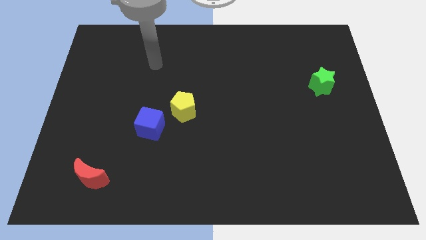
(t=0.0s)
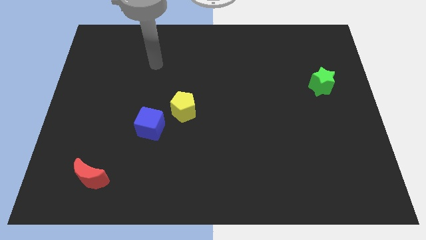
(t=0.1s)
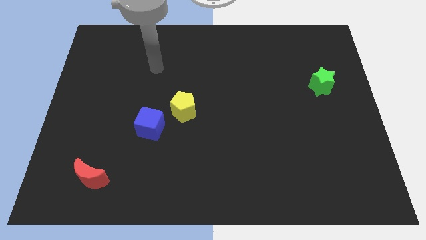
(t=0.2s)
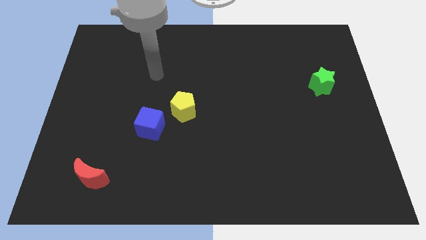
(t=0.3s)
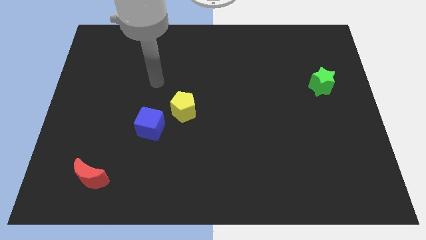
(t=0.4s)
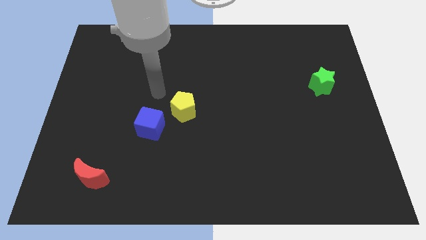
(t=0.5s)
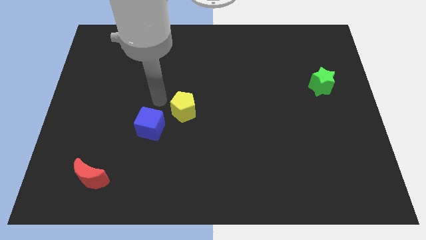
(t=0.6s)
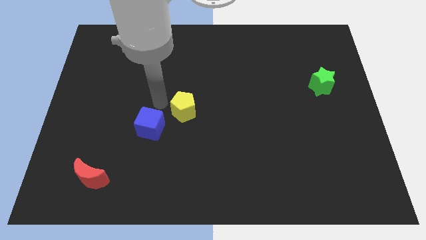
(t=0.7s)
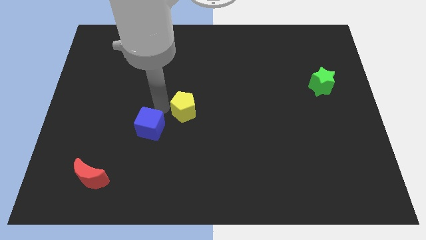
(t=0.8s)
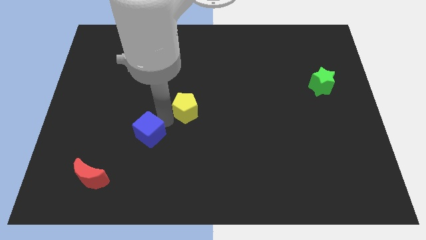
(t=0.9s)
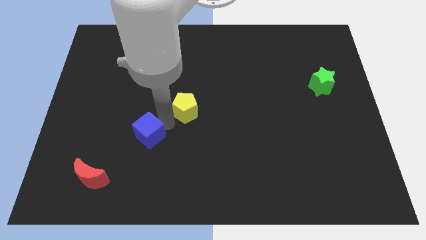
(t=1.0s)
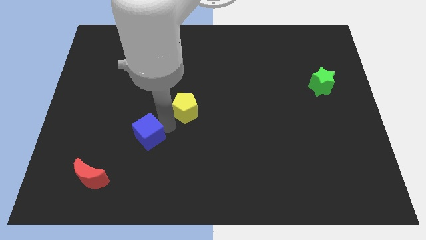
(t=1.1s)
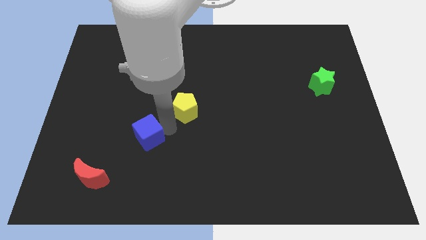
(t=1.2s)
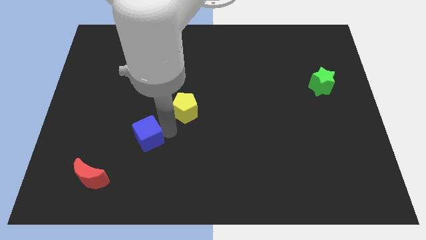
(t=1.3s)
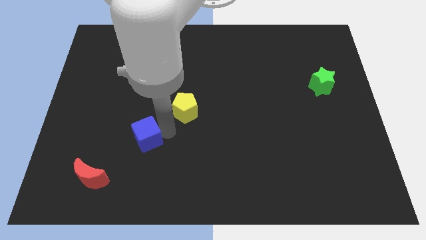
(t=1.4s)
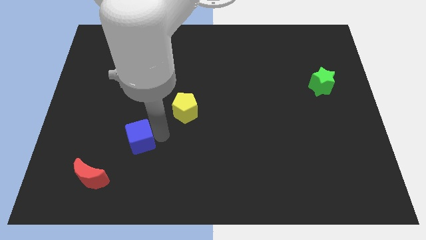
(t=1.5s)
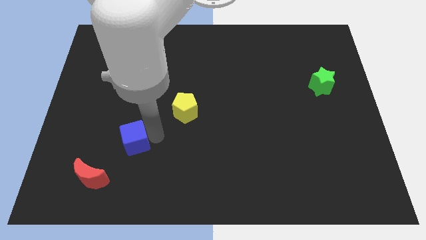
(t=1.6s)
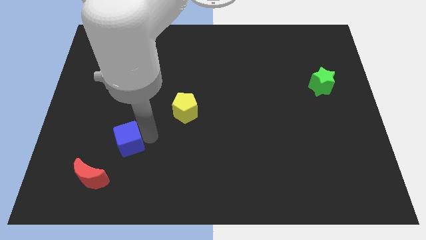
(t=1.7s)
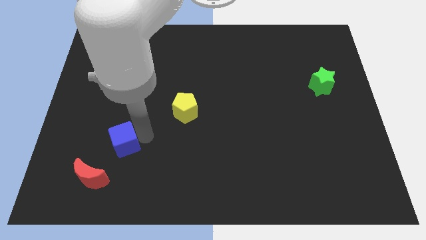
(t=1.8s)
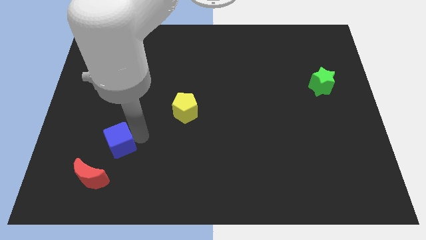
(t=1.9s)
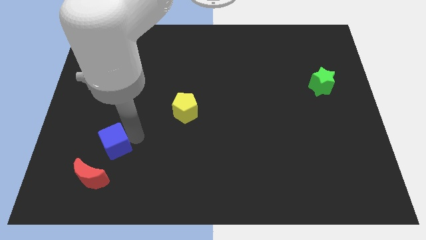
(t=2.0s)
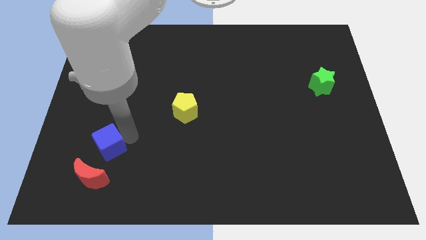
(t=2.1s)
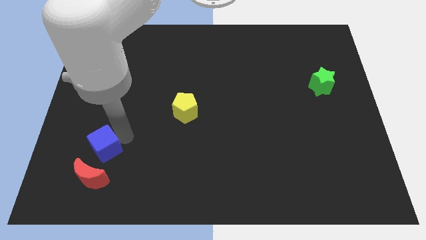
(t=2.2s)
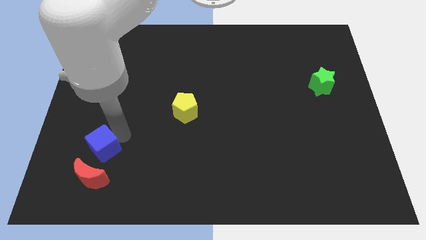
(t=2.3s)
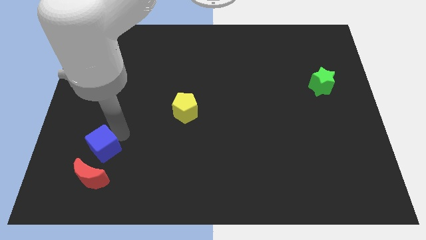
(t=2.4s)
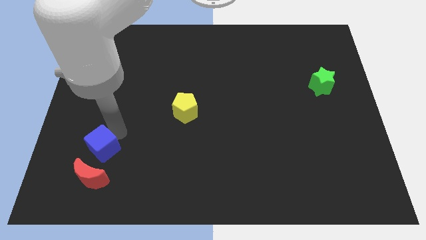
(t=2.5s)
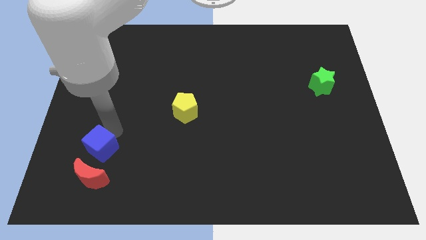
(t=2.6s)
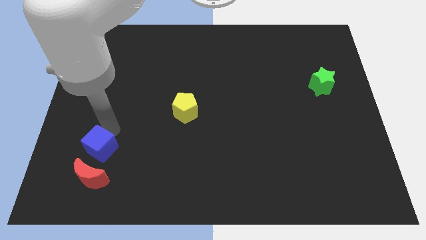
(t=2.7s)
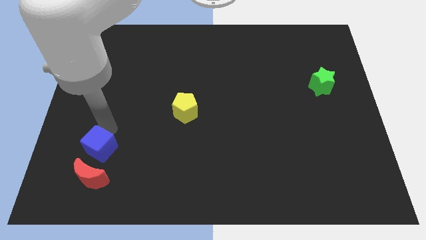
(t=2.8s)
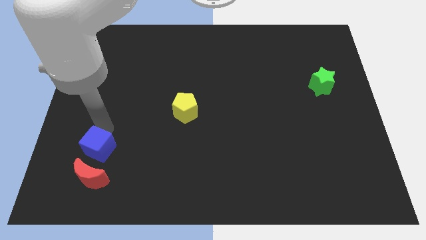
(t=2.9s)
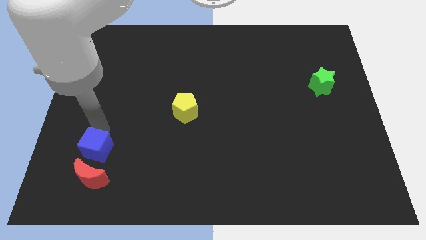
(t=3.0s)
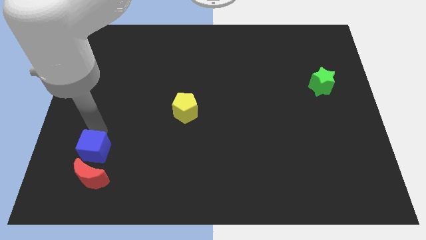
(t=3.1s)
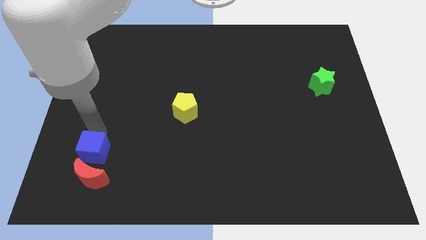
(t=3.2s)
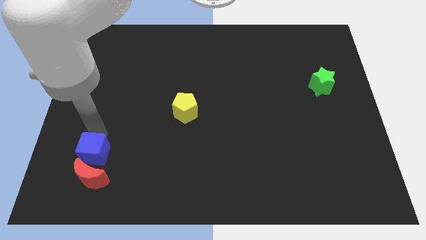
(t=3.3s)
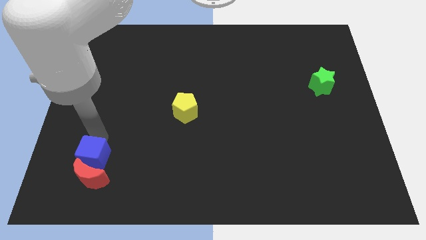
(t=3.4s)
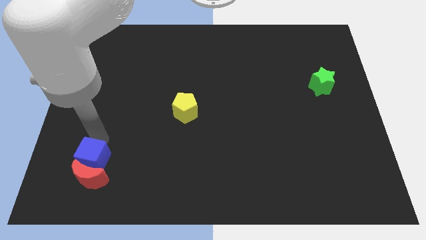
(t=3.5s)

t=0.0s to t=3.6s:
push the blue block to the red moon

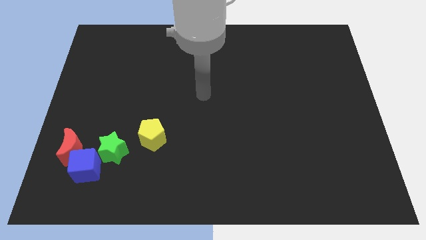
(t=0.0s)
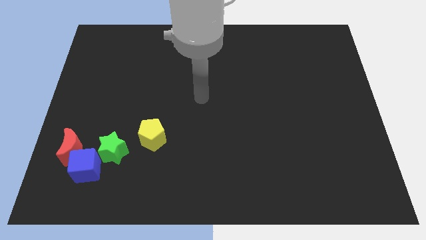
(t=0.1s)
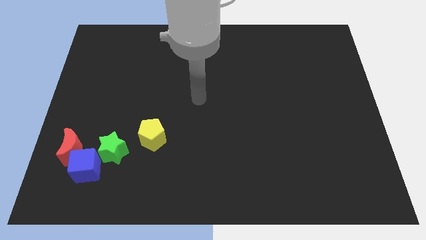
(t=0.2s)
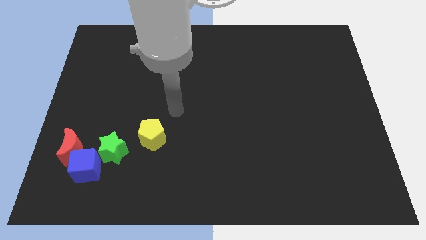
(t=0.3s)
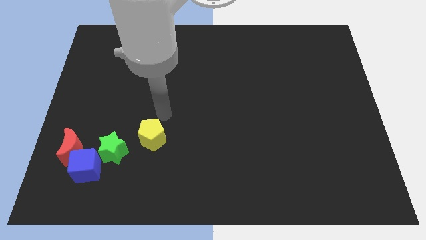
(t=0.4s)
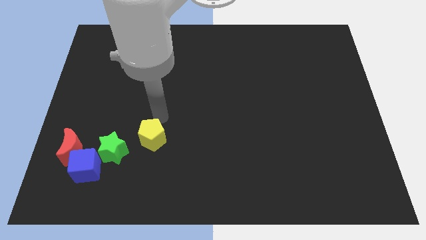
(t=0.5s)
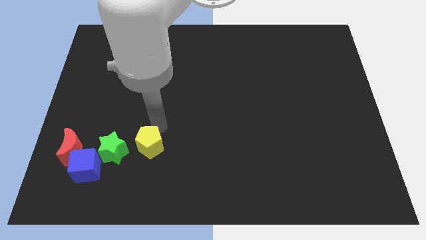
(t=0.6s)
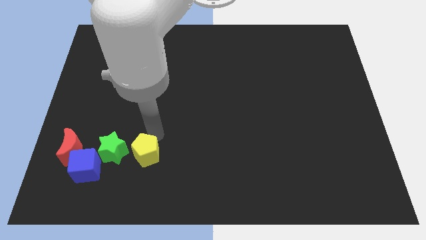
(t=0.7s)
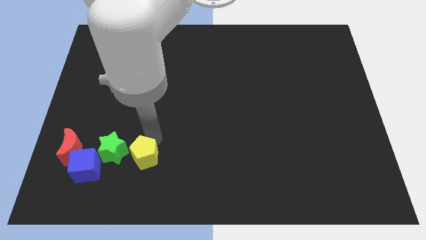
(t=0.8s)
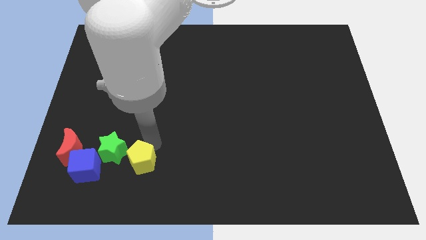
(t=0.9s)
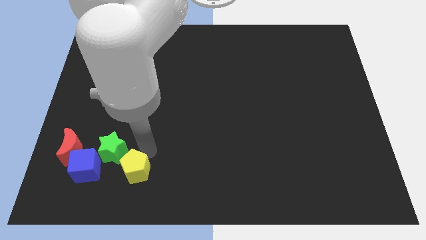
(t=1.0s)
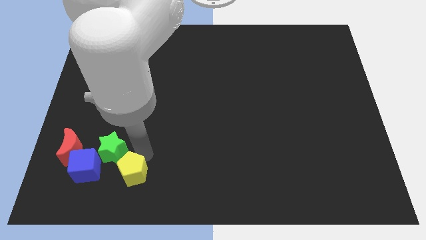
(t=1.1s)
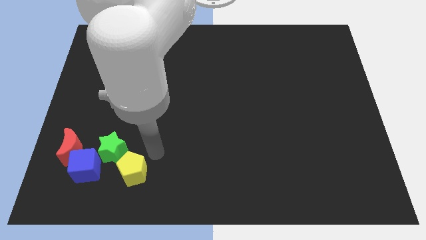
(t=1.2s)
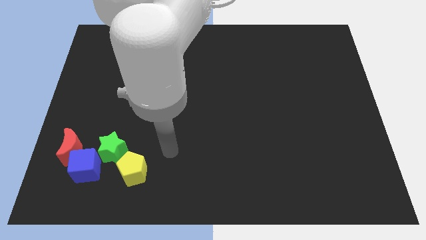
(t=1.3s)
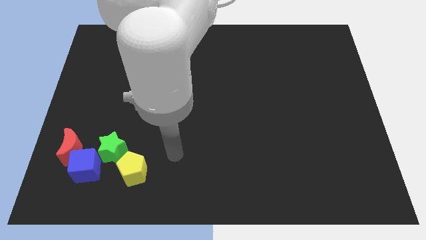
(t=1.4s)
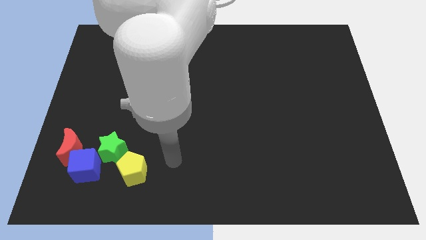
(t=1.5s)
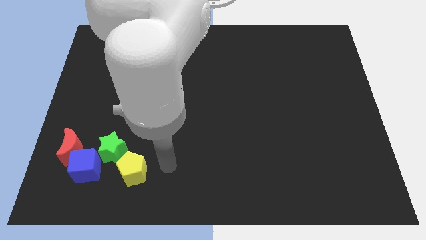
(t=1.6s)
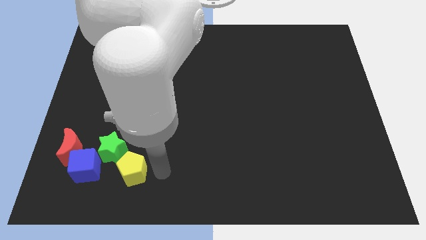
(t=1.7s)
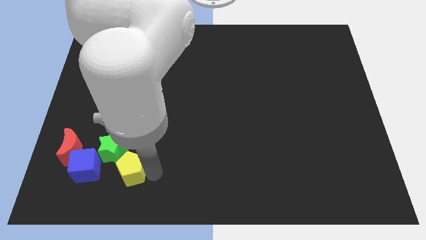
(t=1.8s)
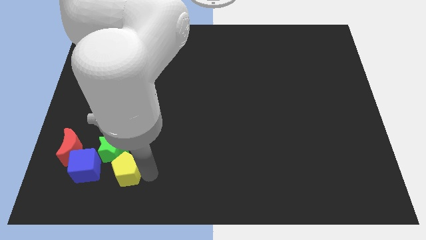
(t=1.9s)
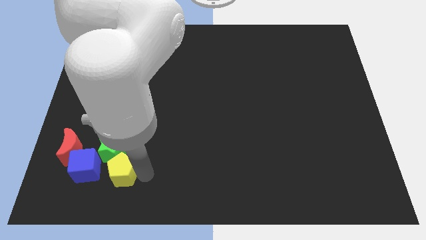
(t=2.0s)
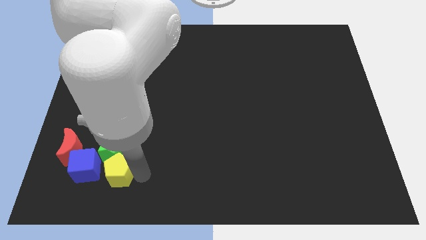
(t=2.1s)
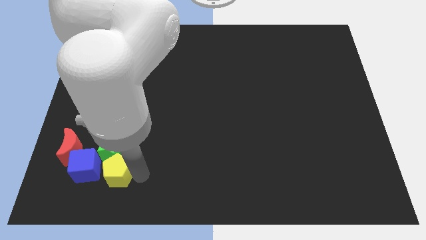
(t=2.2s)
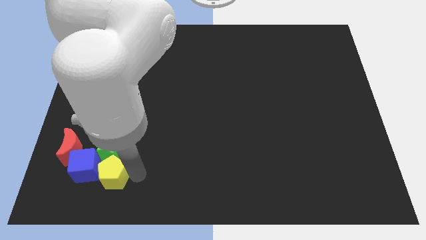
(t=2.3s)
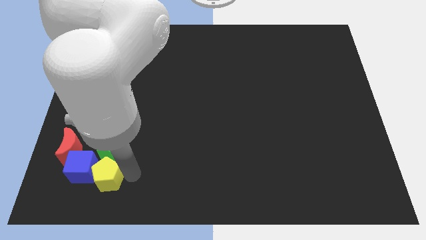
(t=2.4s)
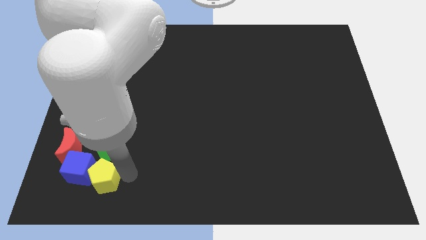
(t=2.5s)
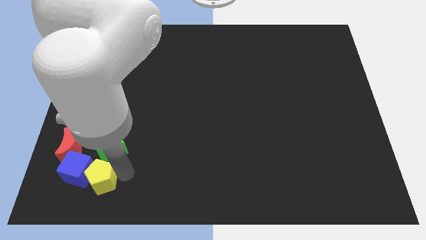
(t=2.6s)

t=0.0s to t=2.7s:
move the yellow pentagon to the blue block

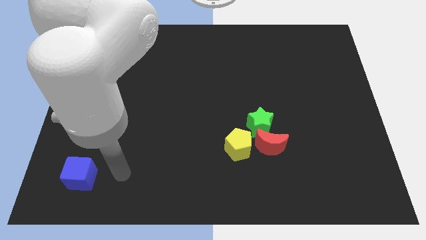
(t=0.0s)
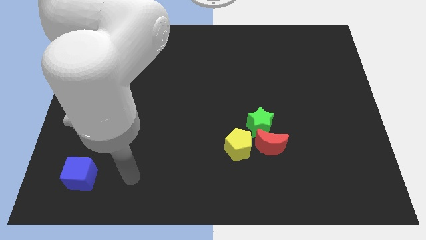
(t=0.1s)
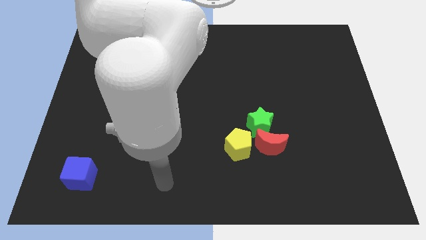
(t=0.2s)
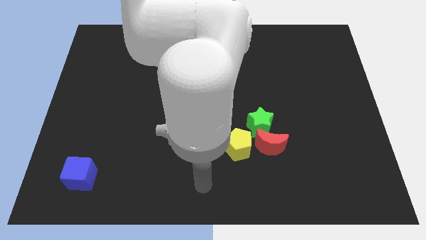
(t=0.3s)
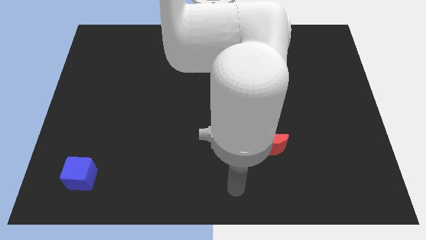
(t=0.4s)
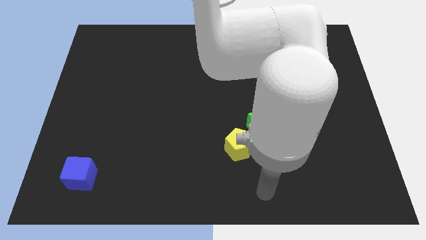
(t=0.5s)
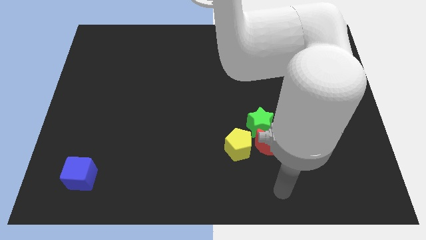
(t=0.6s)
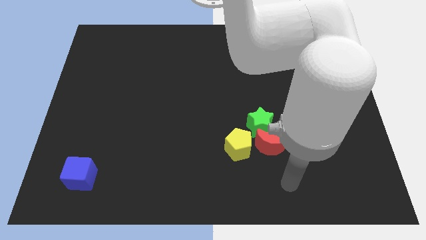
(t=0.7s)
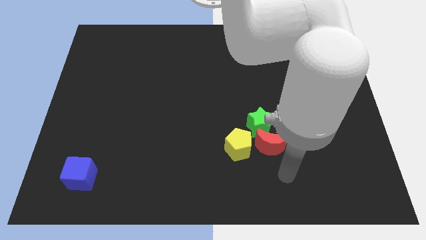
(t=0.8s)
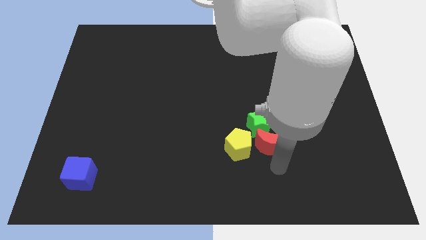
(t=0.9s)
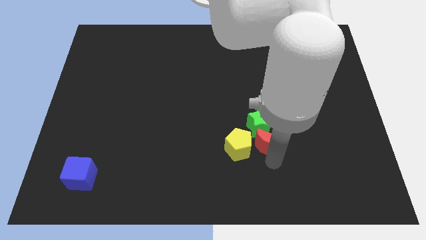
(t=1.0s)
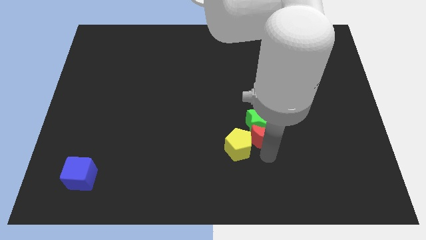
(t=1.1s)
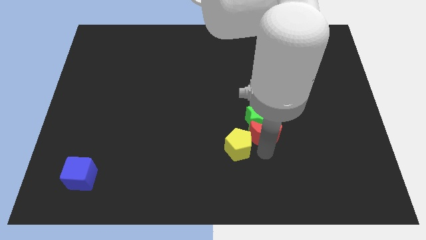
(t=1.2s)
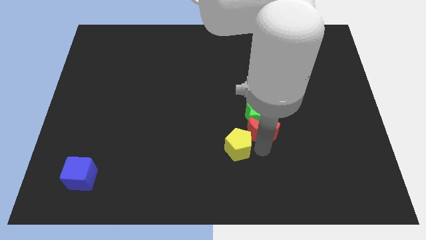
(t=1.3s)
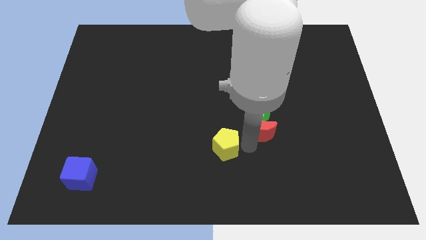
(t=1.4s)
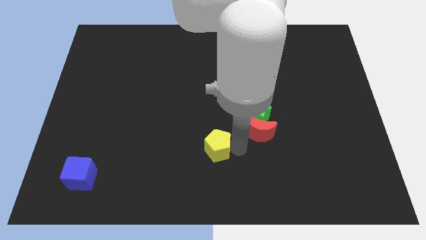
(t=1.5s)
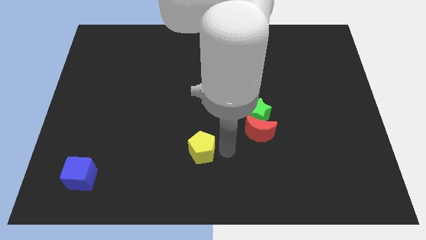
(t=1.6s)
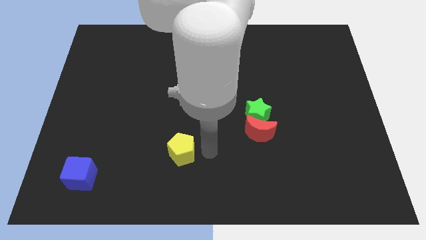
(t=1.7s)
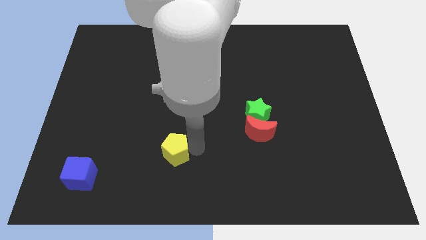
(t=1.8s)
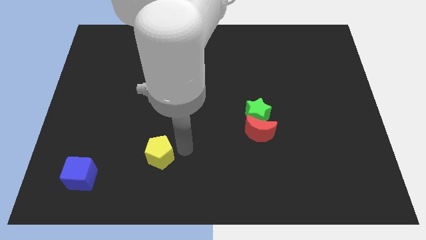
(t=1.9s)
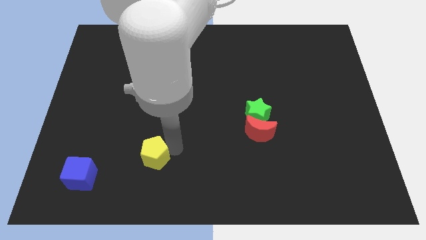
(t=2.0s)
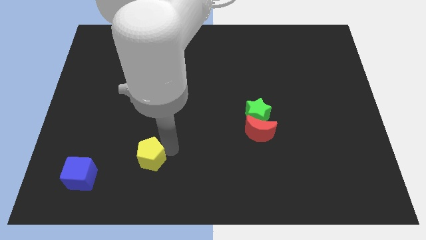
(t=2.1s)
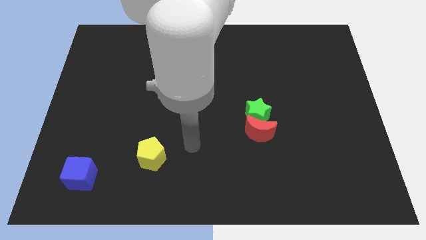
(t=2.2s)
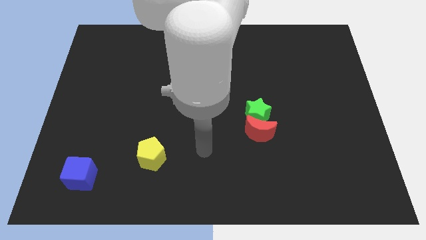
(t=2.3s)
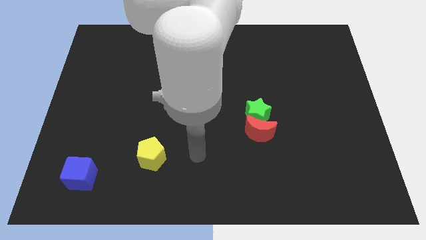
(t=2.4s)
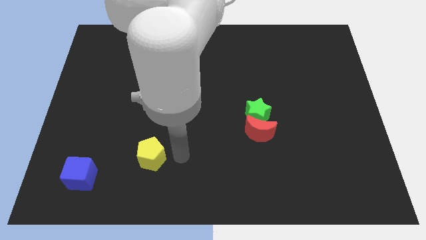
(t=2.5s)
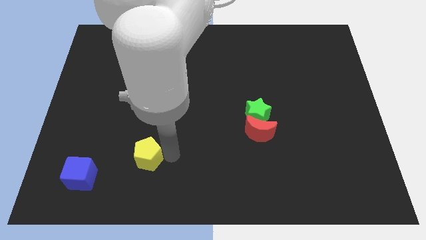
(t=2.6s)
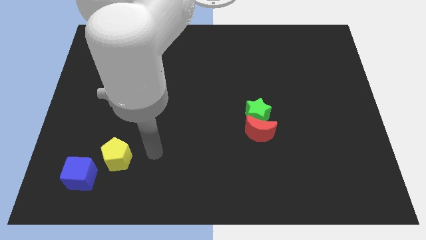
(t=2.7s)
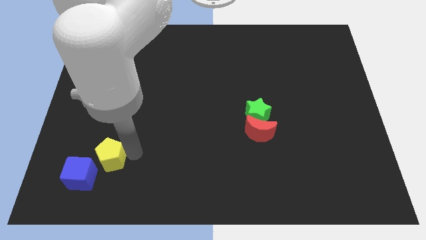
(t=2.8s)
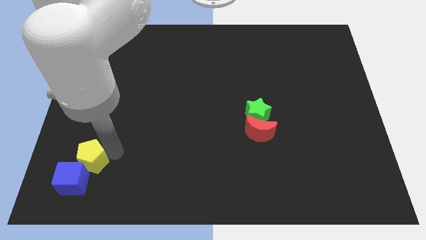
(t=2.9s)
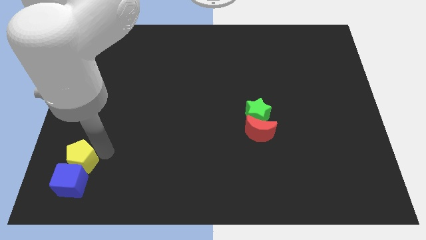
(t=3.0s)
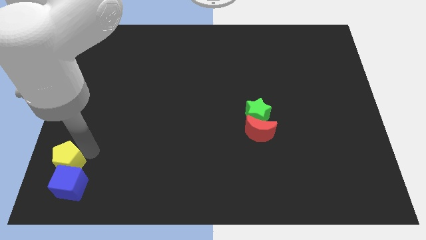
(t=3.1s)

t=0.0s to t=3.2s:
push the yellow pentagon towards the blue cube
